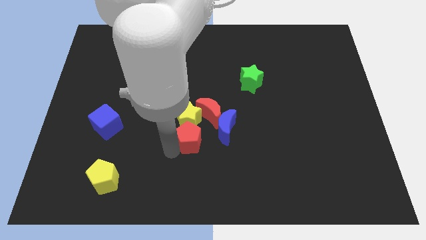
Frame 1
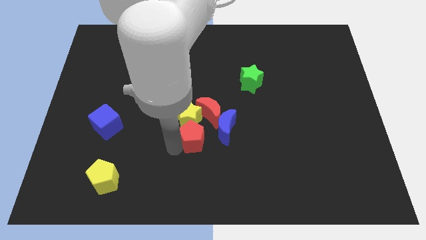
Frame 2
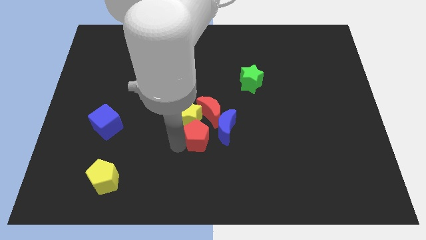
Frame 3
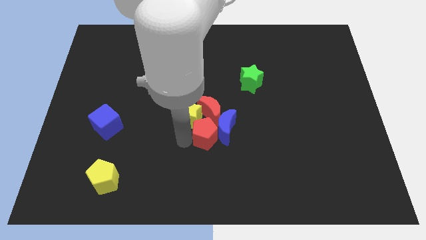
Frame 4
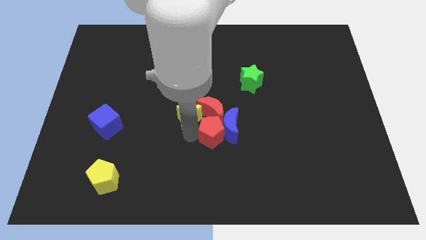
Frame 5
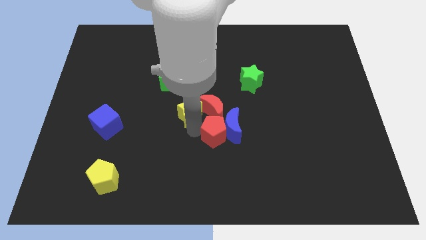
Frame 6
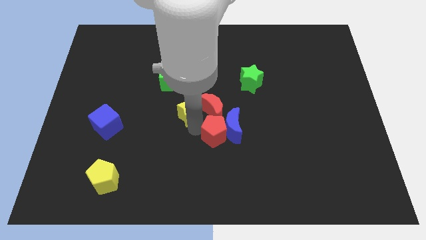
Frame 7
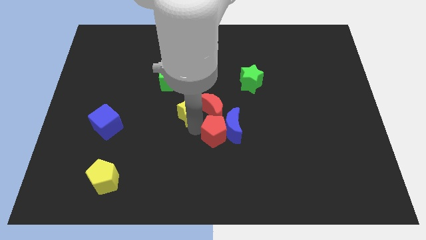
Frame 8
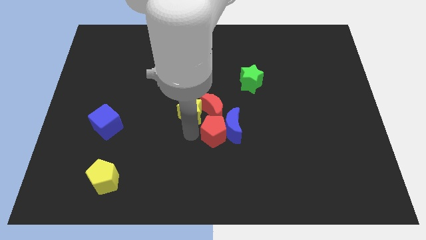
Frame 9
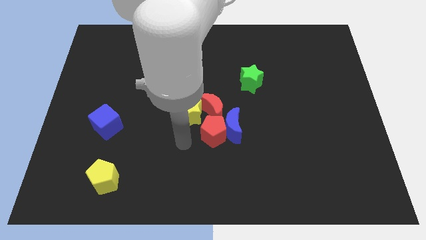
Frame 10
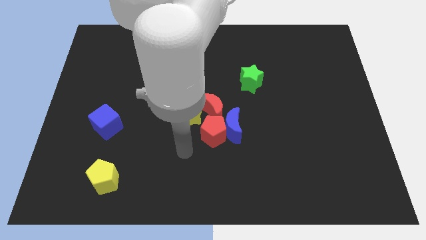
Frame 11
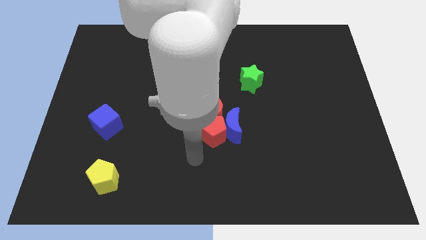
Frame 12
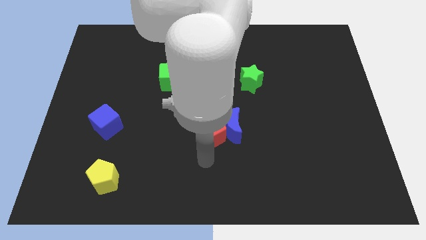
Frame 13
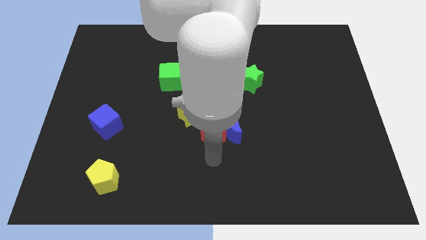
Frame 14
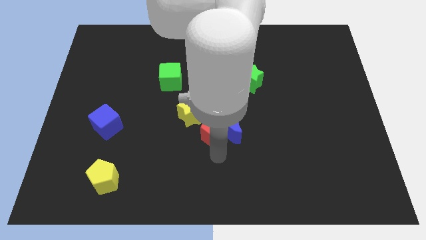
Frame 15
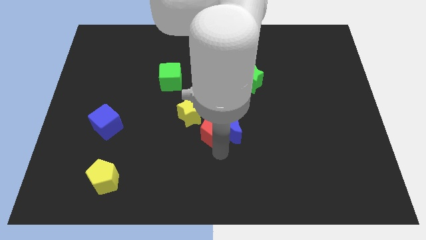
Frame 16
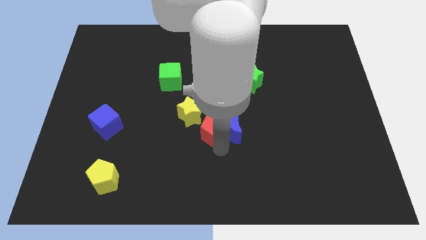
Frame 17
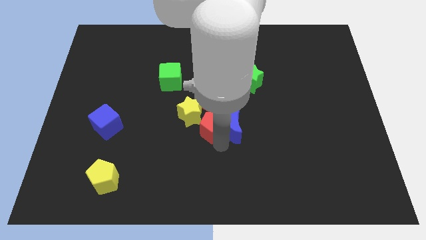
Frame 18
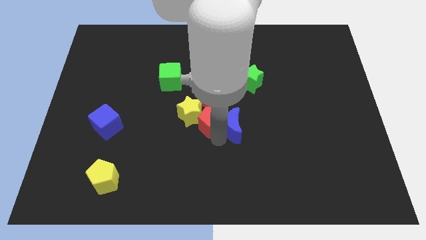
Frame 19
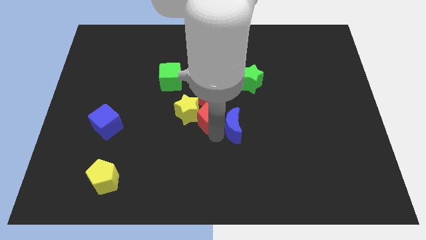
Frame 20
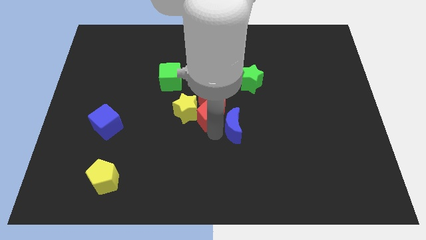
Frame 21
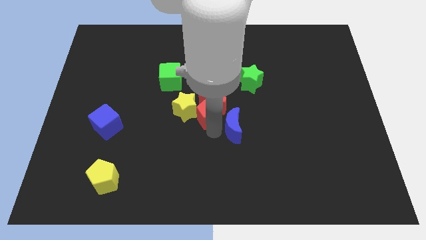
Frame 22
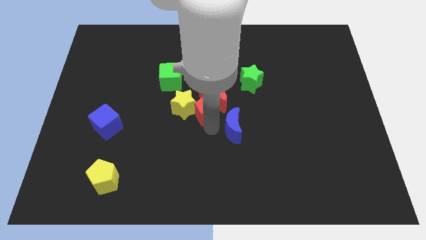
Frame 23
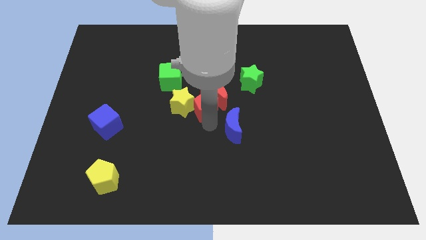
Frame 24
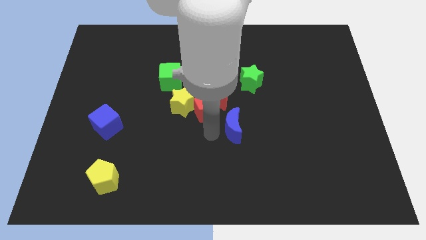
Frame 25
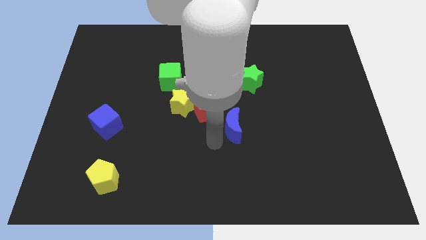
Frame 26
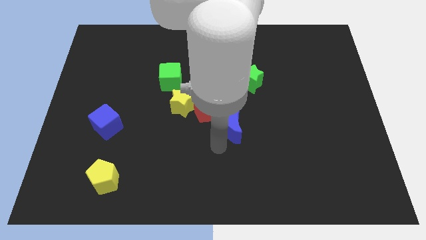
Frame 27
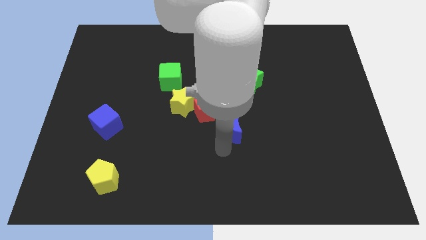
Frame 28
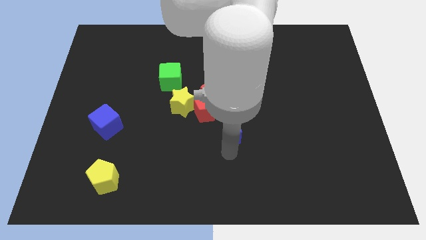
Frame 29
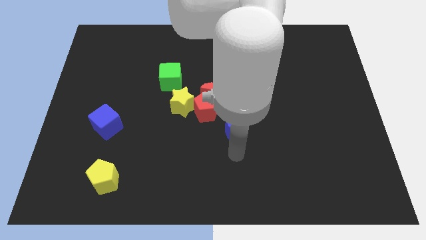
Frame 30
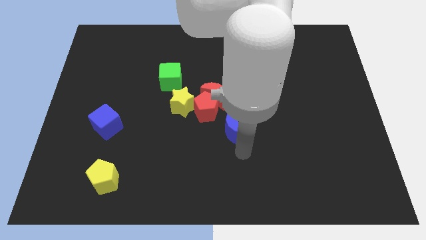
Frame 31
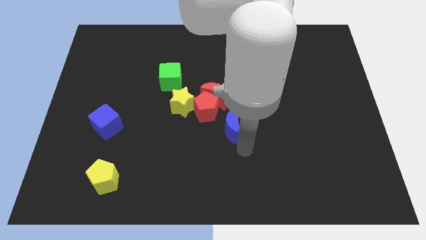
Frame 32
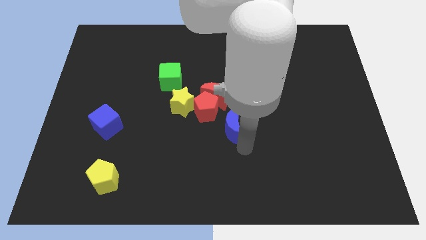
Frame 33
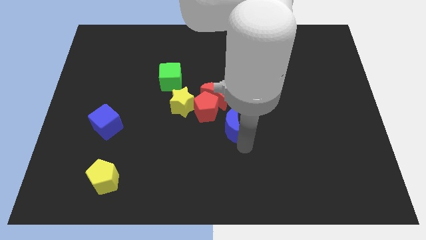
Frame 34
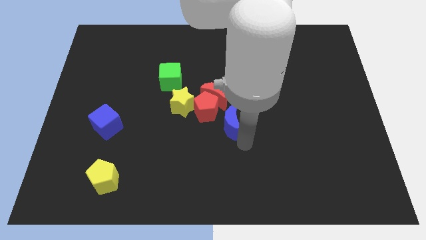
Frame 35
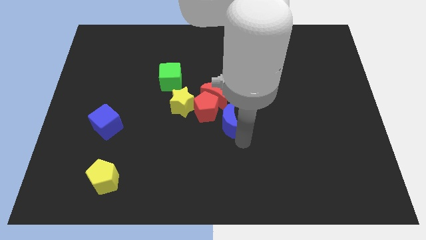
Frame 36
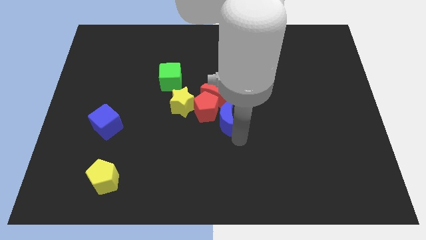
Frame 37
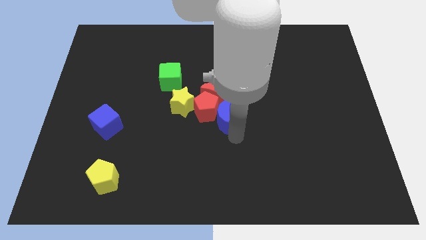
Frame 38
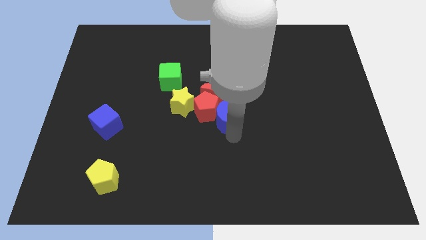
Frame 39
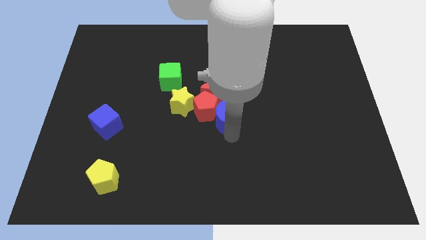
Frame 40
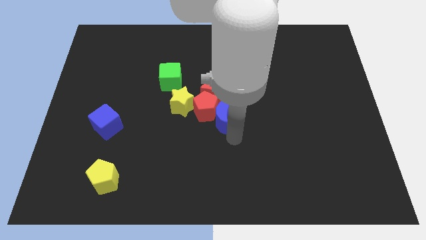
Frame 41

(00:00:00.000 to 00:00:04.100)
make a diagonal line out of red pentagon yellow star and the blue moon

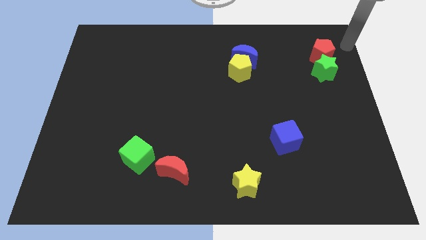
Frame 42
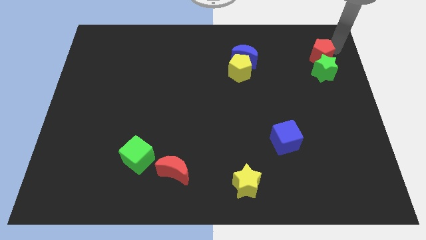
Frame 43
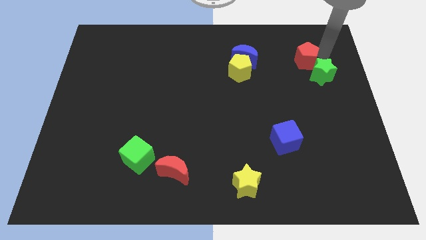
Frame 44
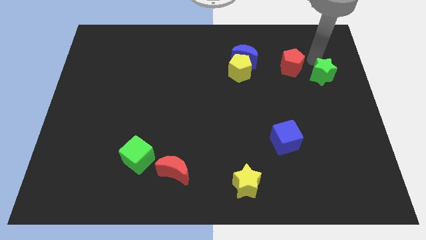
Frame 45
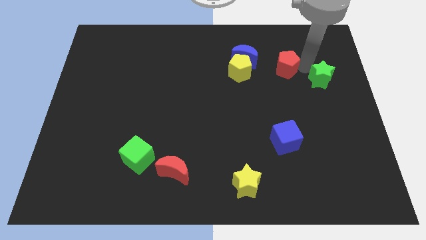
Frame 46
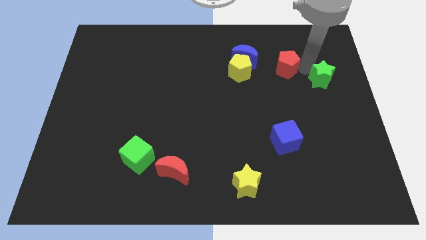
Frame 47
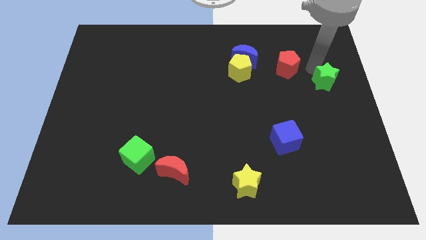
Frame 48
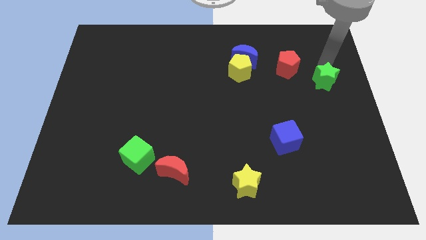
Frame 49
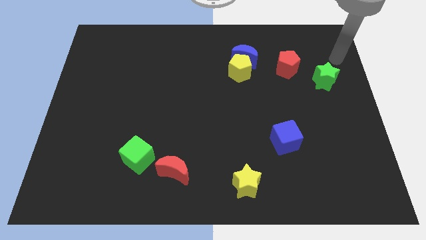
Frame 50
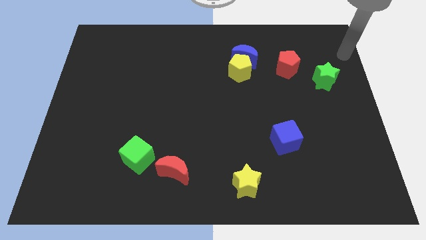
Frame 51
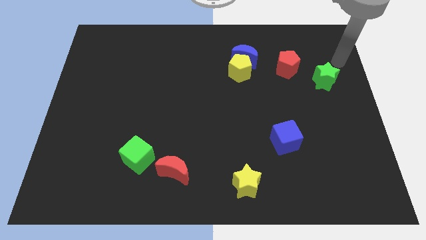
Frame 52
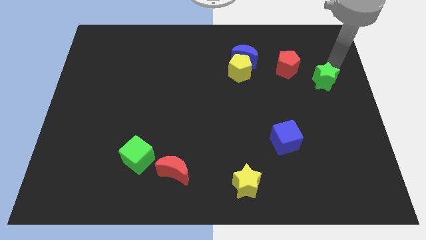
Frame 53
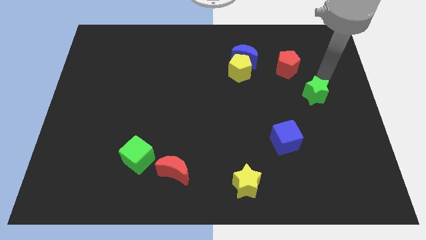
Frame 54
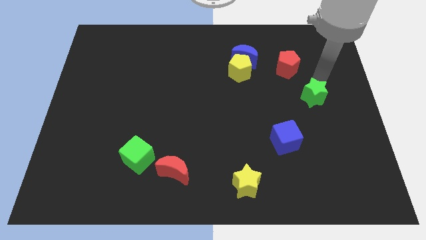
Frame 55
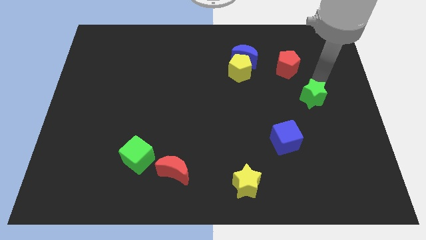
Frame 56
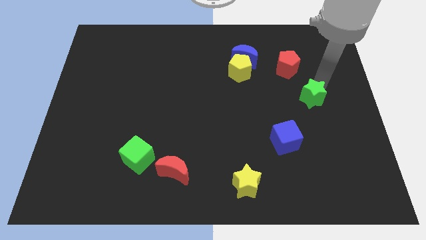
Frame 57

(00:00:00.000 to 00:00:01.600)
separate red pentagon from green star

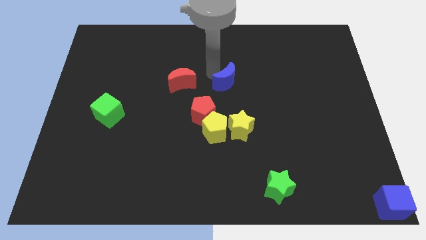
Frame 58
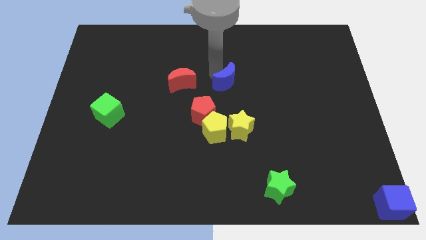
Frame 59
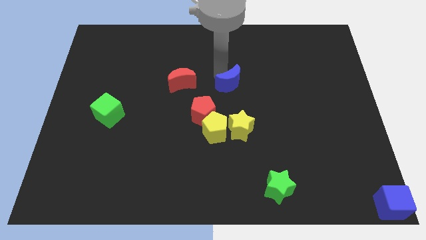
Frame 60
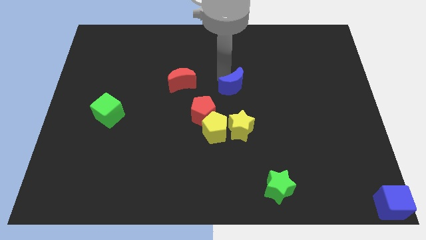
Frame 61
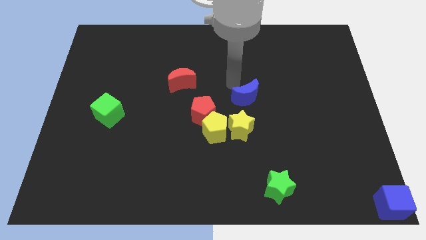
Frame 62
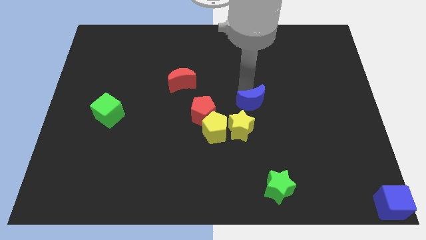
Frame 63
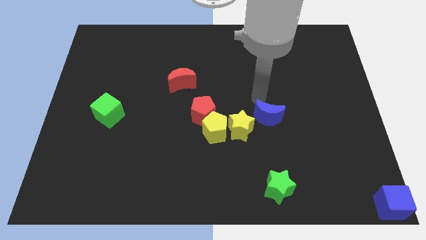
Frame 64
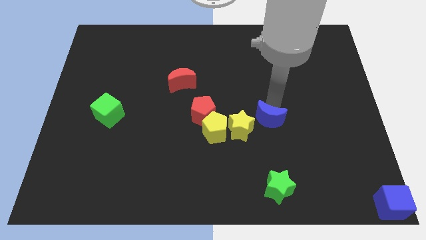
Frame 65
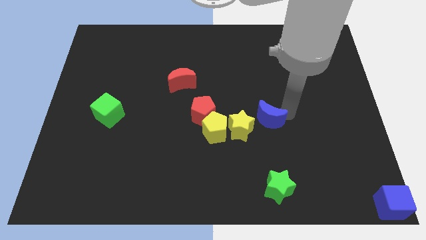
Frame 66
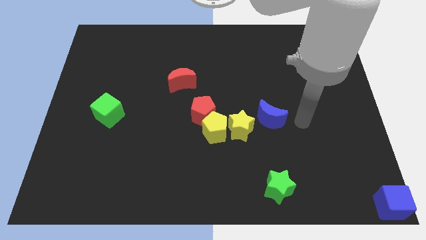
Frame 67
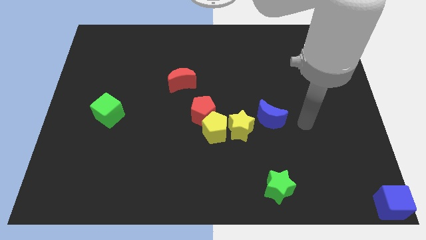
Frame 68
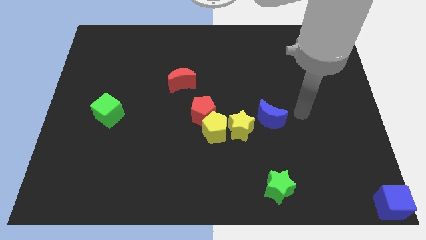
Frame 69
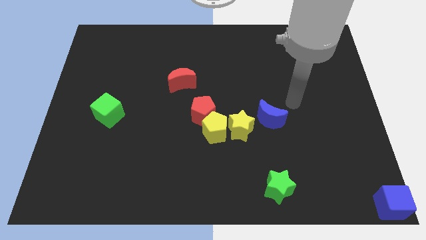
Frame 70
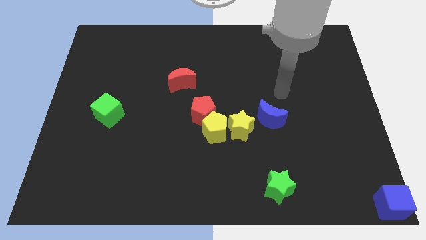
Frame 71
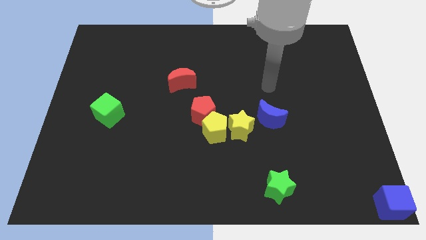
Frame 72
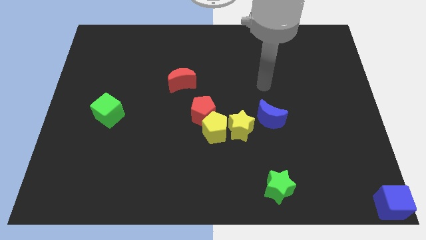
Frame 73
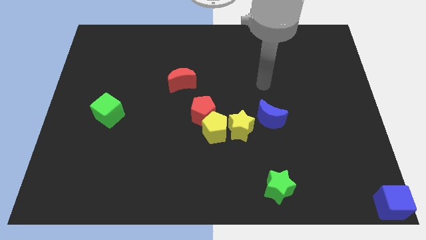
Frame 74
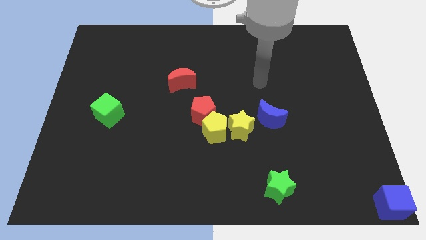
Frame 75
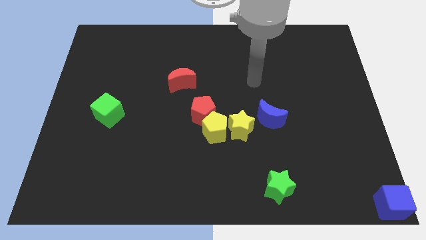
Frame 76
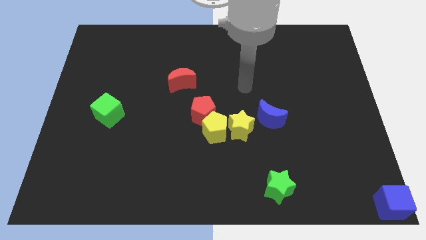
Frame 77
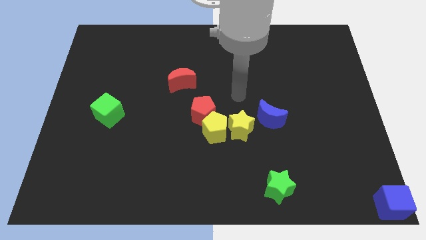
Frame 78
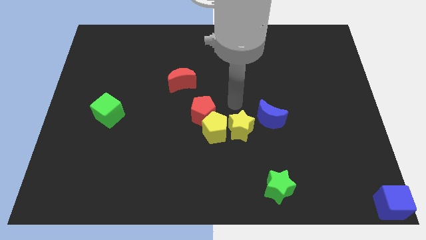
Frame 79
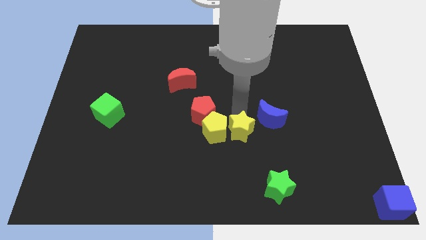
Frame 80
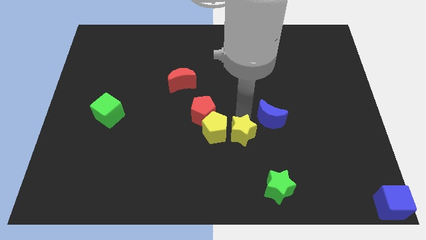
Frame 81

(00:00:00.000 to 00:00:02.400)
place the blue moon towards bottom center of the board

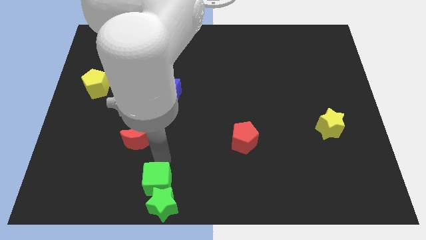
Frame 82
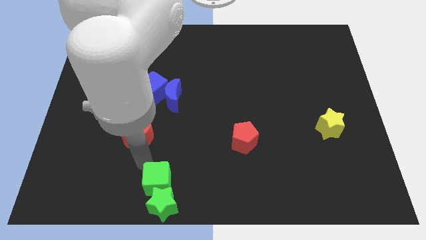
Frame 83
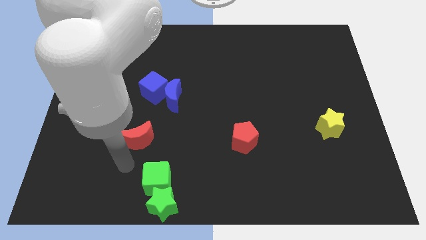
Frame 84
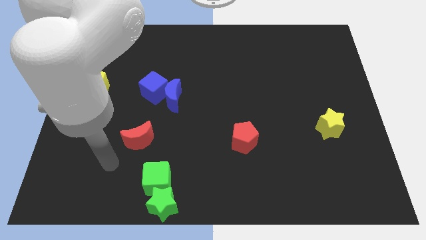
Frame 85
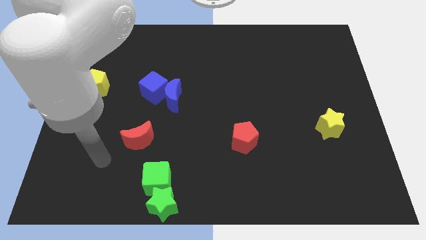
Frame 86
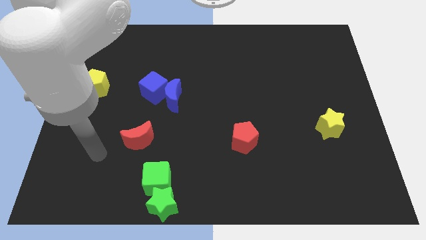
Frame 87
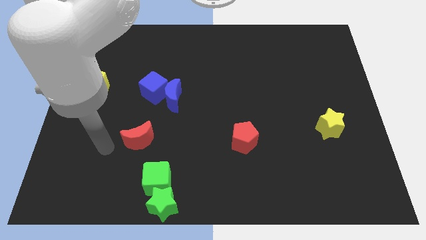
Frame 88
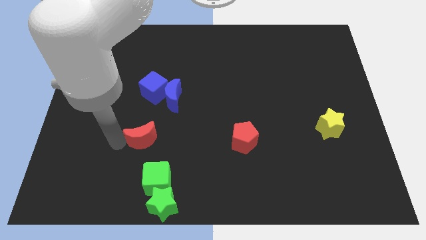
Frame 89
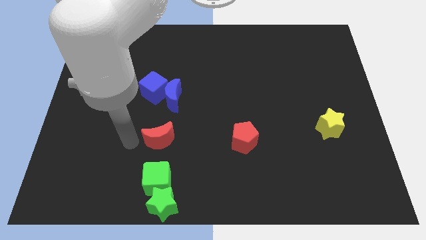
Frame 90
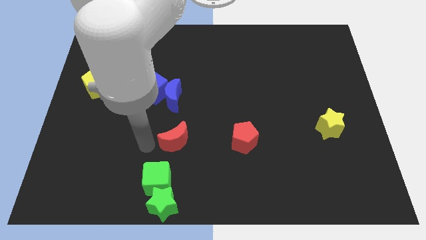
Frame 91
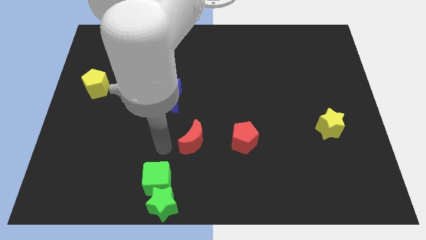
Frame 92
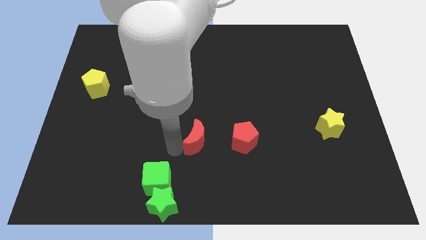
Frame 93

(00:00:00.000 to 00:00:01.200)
put the red moon parallel to red pentagon
